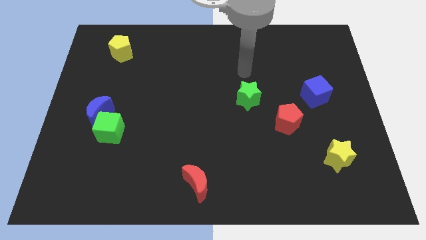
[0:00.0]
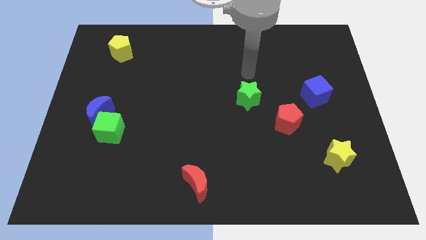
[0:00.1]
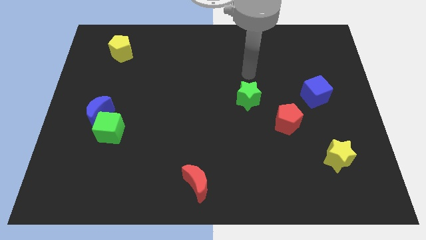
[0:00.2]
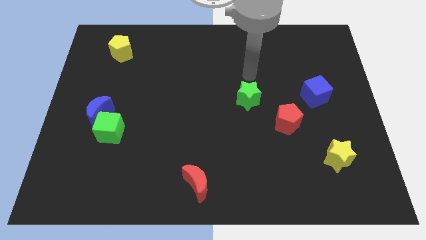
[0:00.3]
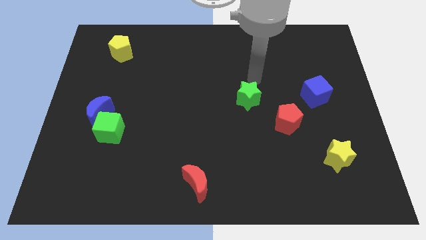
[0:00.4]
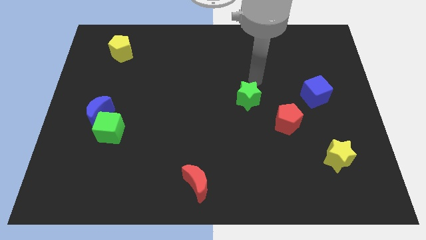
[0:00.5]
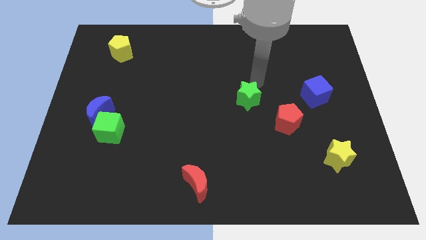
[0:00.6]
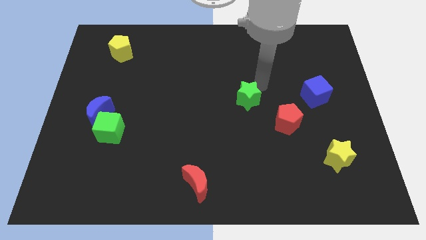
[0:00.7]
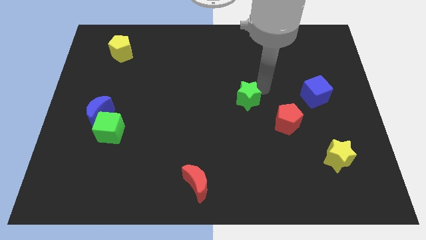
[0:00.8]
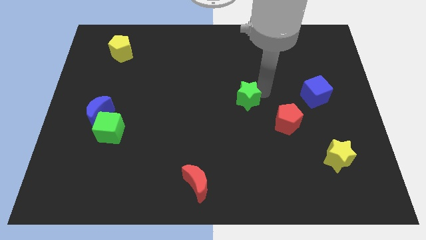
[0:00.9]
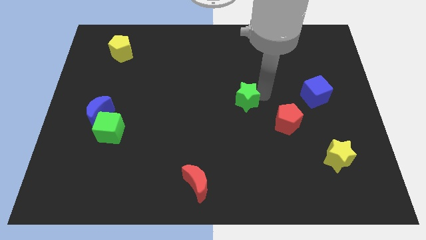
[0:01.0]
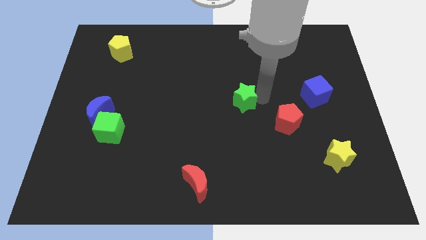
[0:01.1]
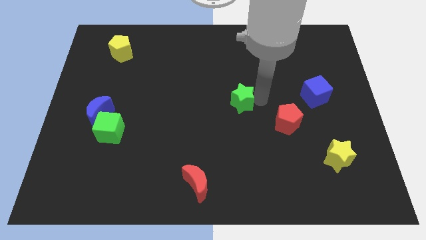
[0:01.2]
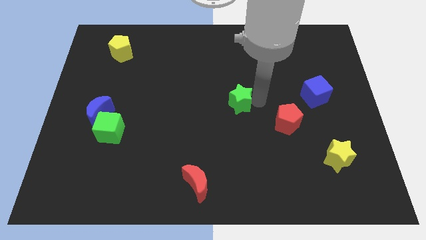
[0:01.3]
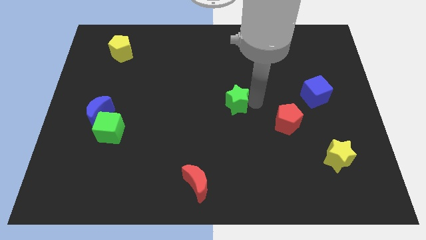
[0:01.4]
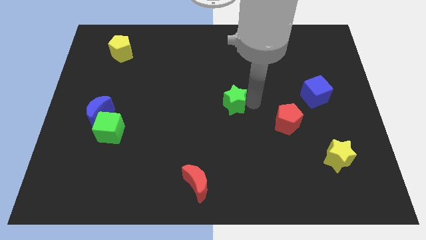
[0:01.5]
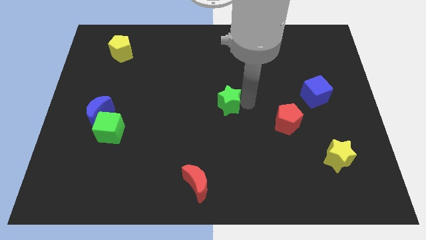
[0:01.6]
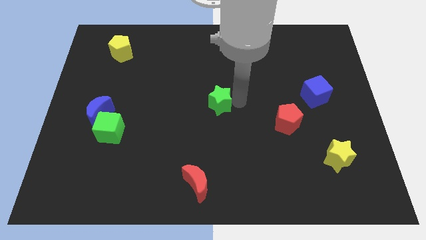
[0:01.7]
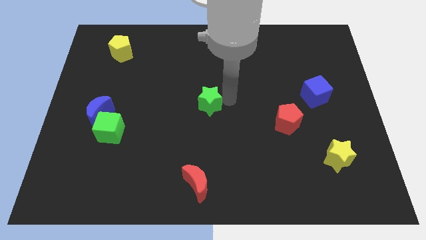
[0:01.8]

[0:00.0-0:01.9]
push the green star slightly to the left side of the board

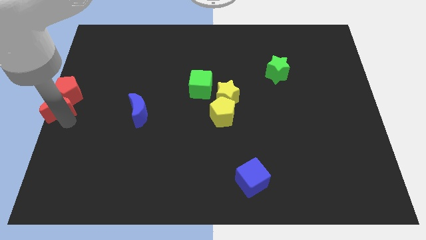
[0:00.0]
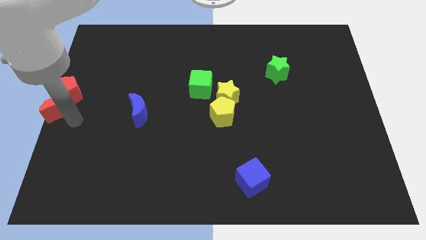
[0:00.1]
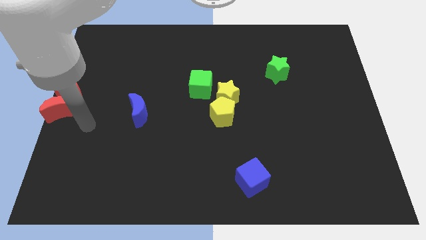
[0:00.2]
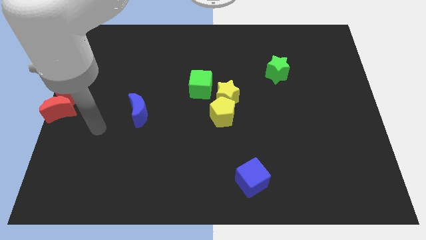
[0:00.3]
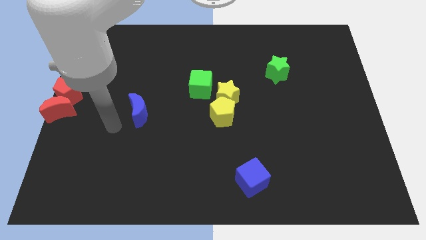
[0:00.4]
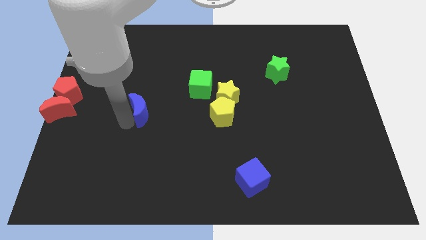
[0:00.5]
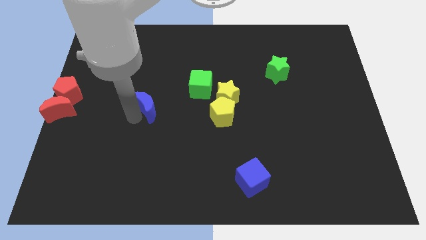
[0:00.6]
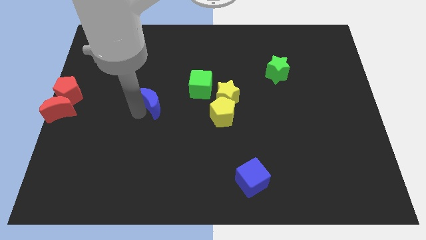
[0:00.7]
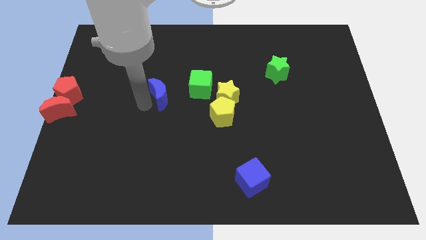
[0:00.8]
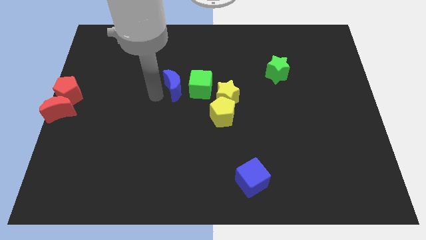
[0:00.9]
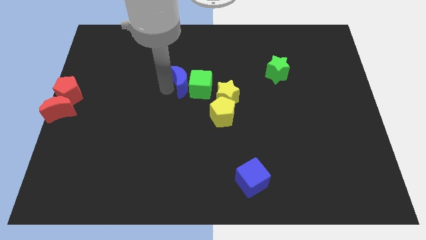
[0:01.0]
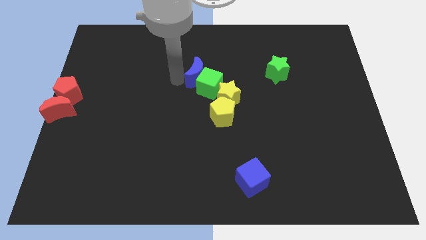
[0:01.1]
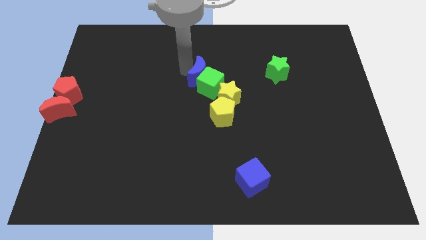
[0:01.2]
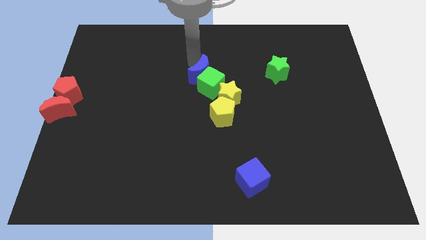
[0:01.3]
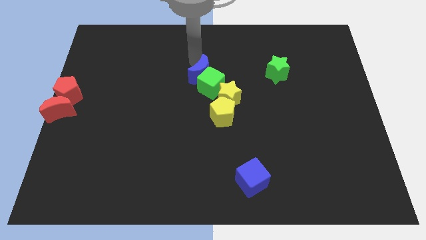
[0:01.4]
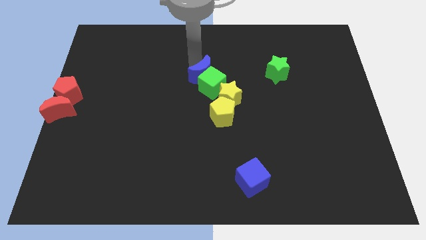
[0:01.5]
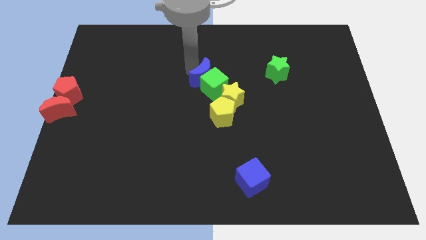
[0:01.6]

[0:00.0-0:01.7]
push blue crescent beside green cube

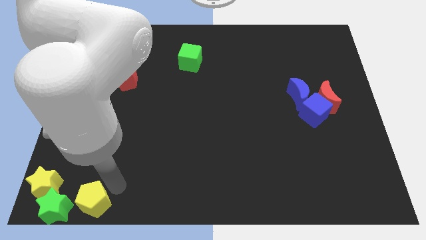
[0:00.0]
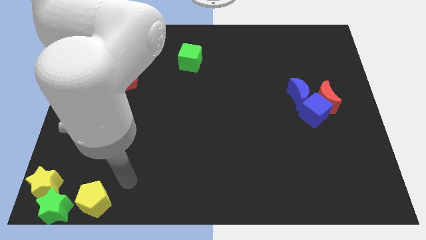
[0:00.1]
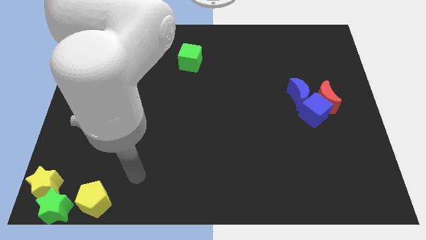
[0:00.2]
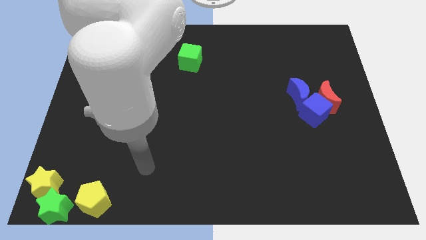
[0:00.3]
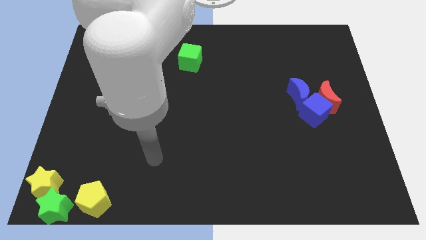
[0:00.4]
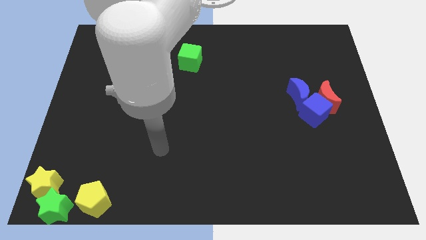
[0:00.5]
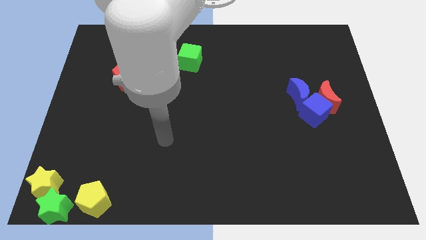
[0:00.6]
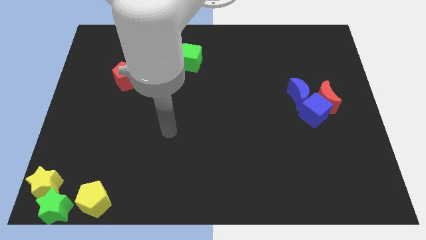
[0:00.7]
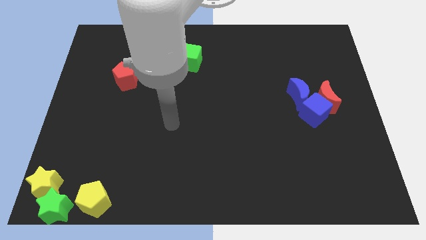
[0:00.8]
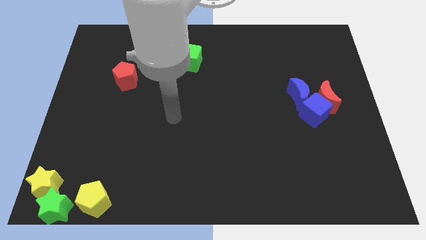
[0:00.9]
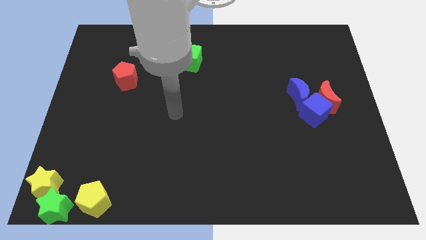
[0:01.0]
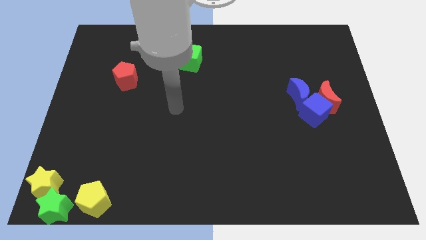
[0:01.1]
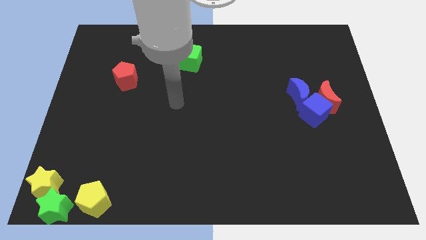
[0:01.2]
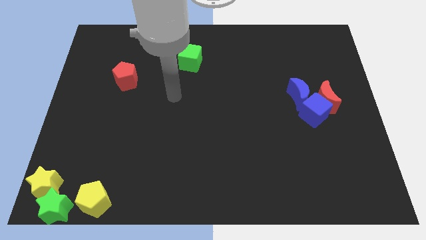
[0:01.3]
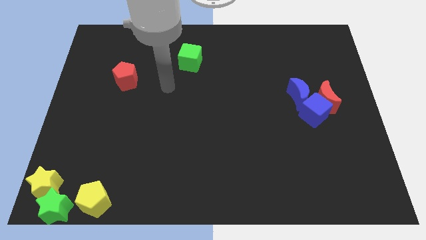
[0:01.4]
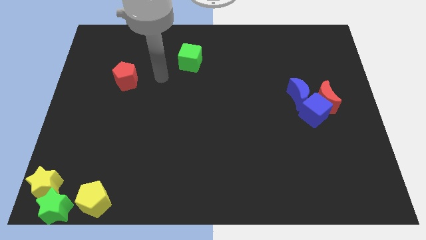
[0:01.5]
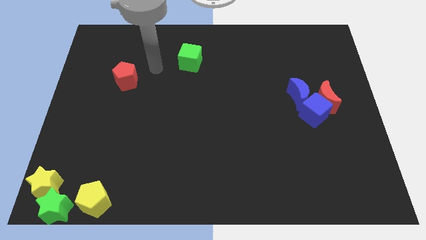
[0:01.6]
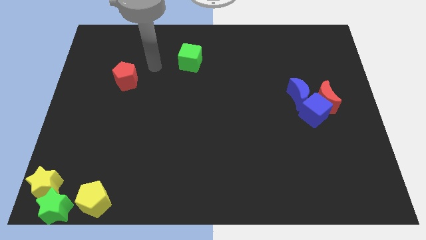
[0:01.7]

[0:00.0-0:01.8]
point your arm between green cube and red pentagon

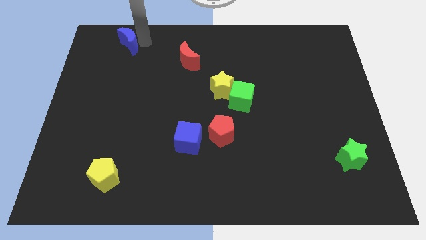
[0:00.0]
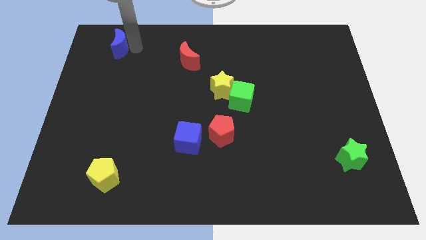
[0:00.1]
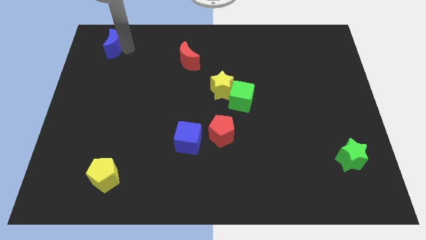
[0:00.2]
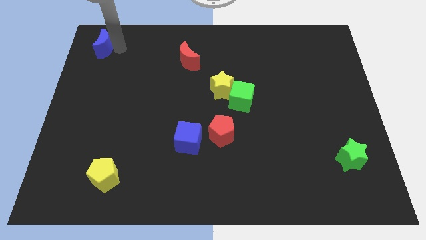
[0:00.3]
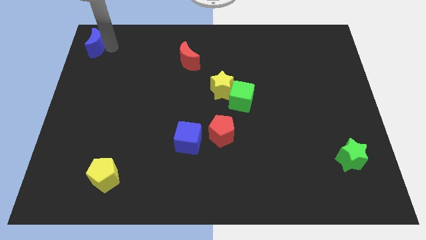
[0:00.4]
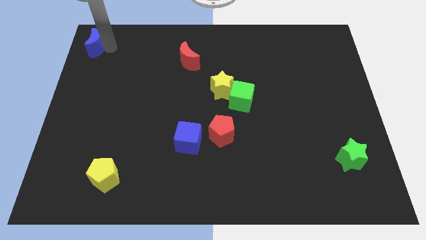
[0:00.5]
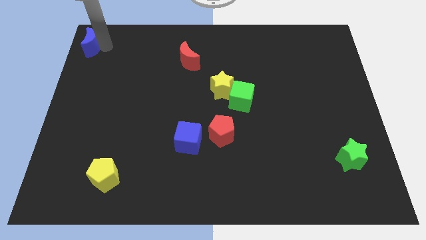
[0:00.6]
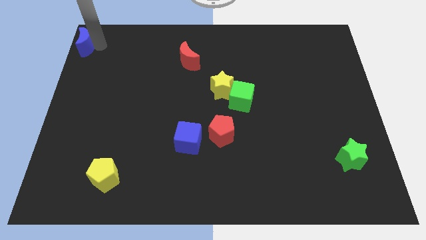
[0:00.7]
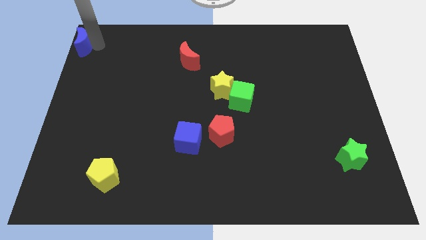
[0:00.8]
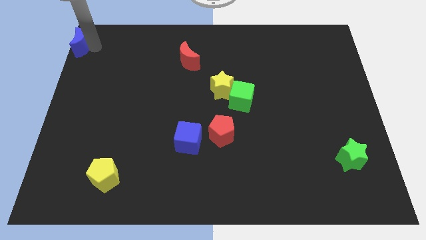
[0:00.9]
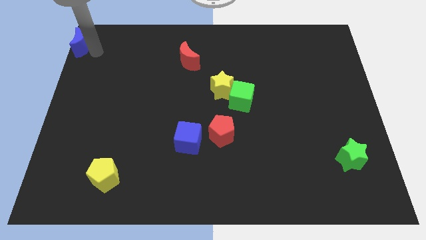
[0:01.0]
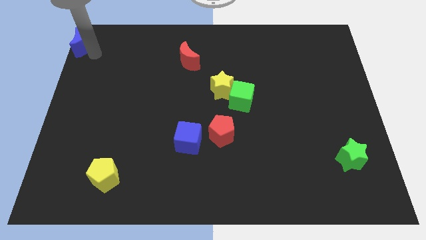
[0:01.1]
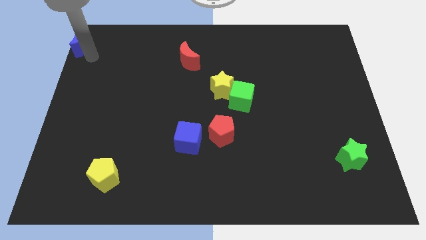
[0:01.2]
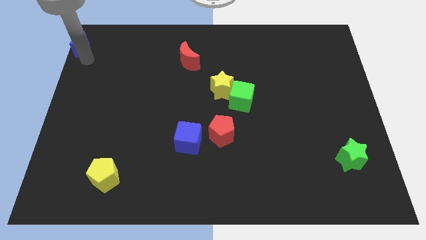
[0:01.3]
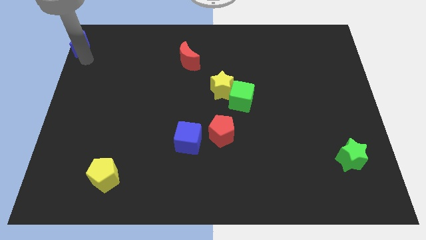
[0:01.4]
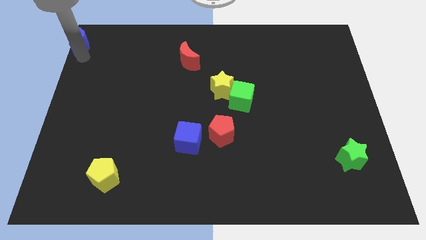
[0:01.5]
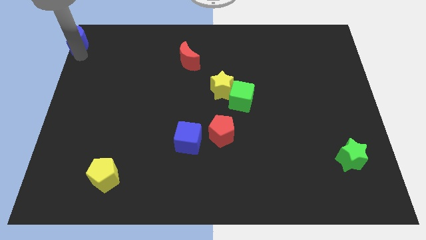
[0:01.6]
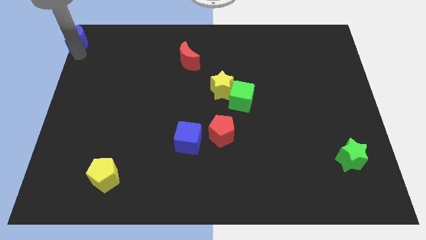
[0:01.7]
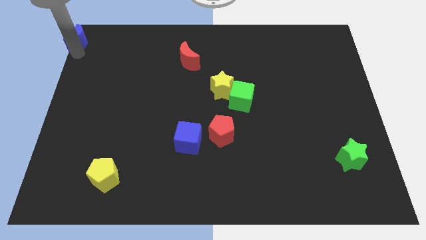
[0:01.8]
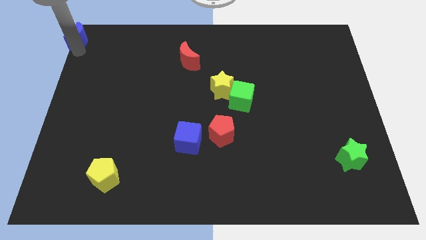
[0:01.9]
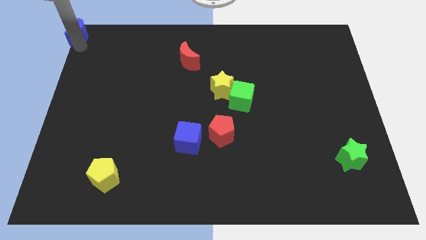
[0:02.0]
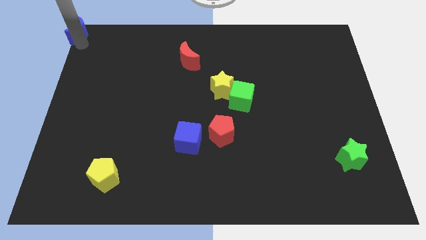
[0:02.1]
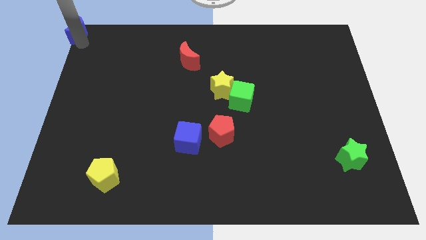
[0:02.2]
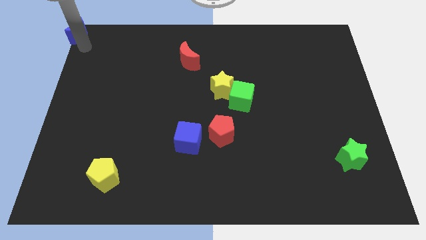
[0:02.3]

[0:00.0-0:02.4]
put the blue crescent at the top left corner of the board

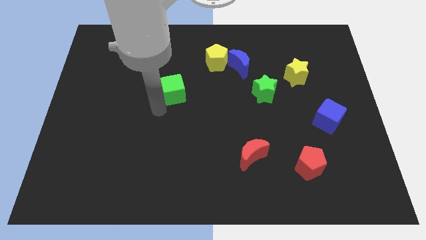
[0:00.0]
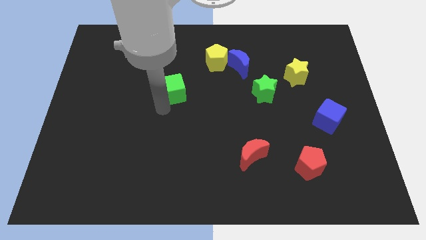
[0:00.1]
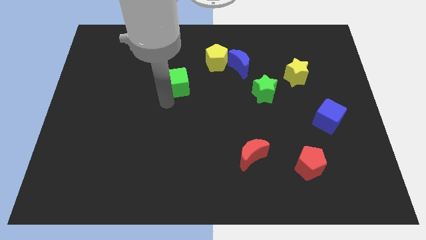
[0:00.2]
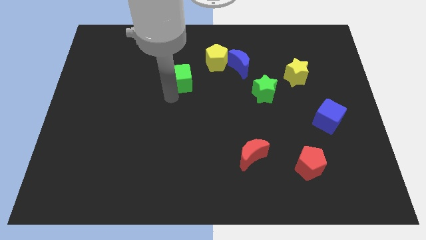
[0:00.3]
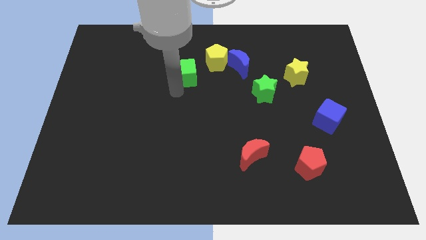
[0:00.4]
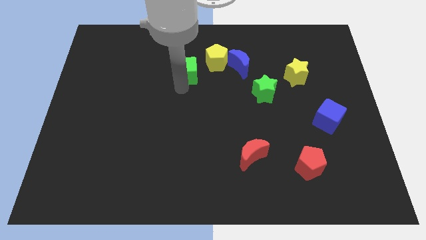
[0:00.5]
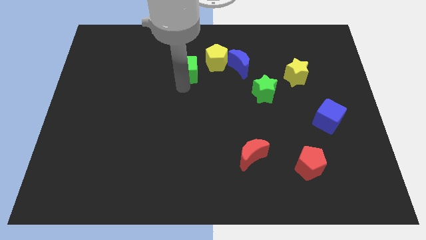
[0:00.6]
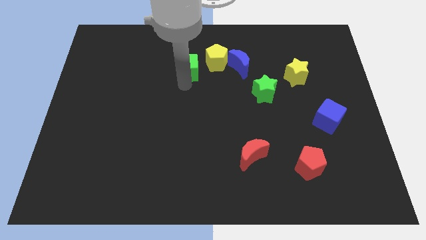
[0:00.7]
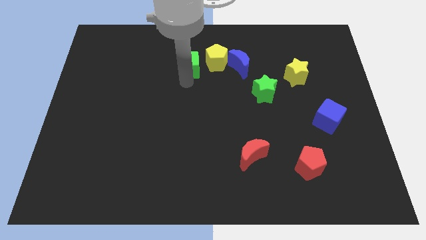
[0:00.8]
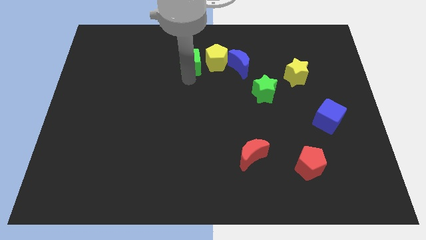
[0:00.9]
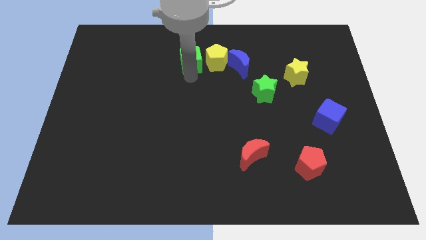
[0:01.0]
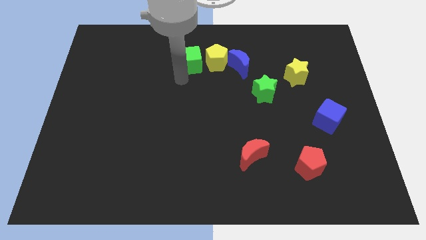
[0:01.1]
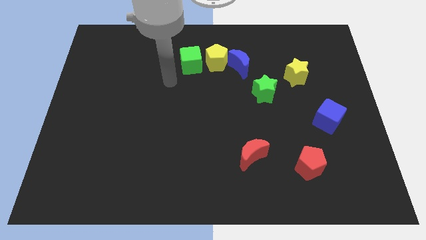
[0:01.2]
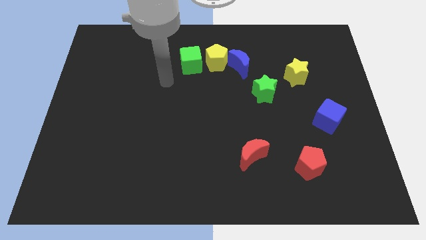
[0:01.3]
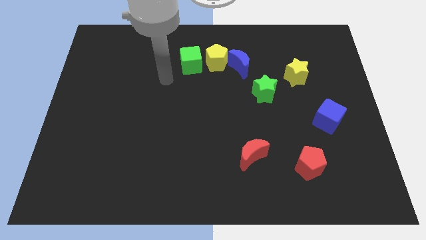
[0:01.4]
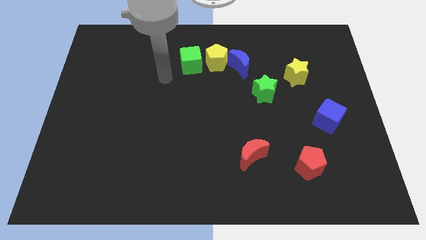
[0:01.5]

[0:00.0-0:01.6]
move the green cube to the left of the yellow pentagon
